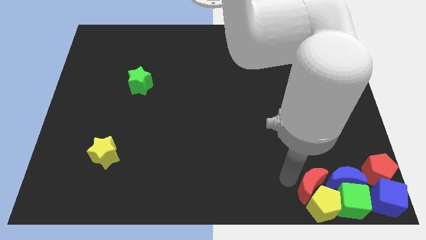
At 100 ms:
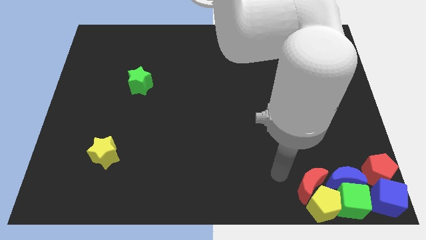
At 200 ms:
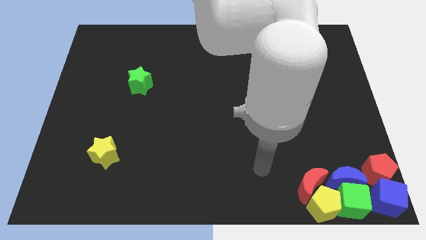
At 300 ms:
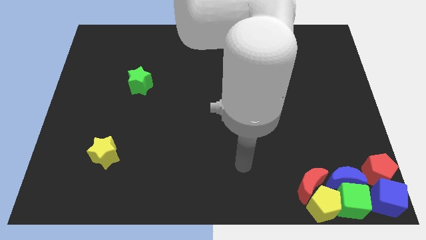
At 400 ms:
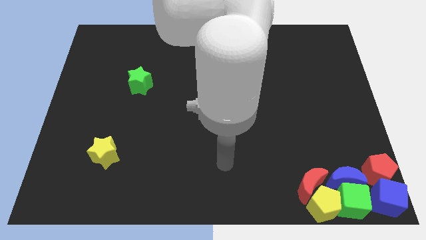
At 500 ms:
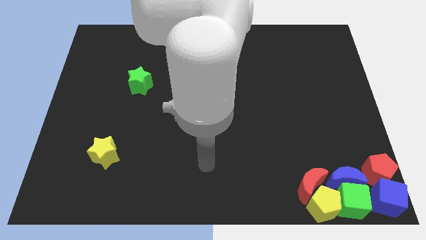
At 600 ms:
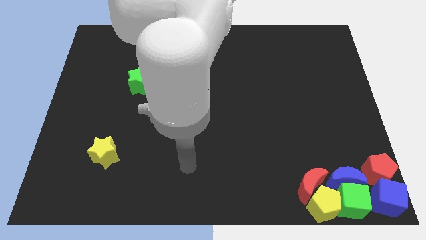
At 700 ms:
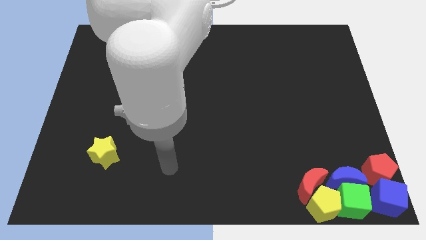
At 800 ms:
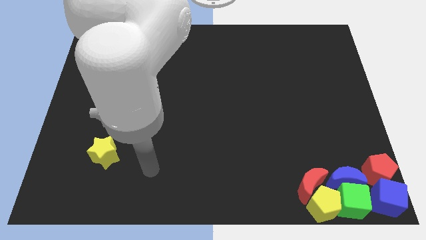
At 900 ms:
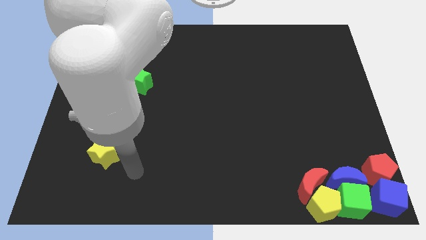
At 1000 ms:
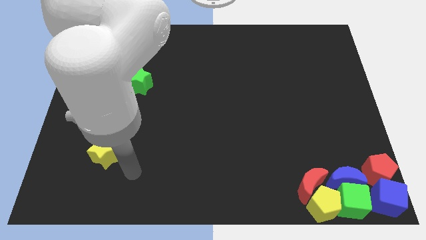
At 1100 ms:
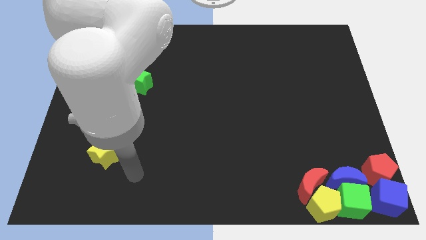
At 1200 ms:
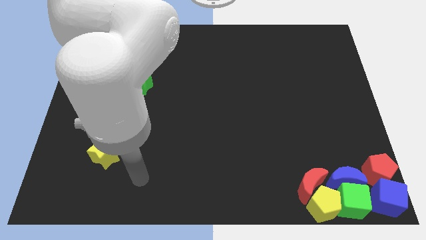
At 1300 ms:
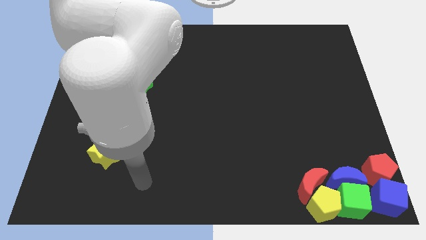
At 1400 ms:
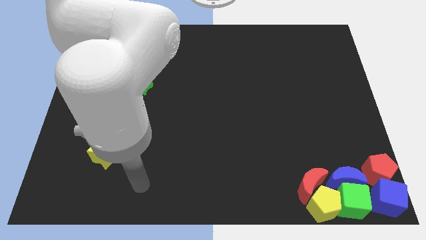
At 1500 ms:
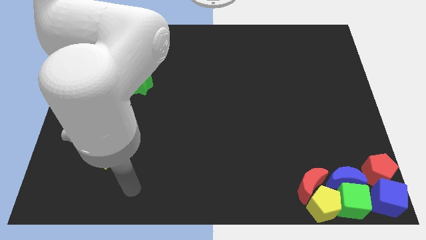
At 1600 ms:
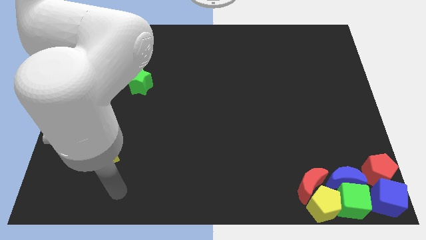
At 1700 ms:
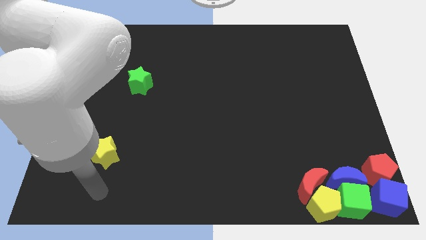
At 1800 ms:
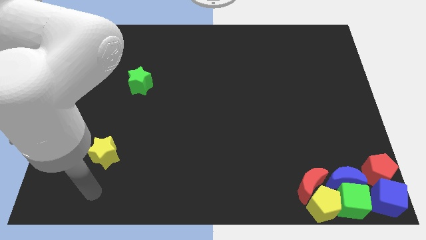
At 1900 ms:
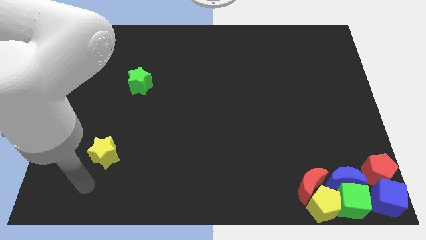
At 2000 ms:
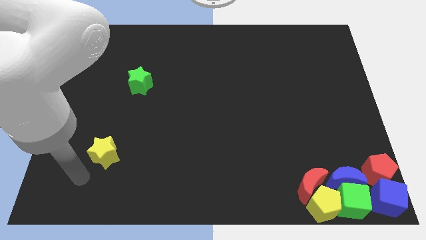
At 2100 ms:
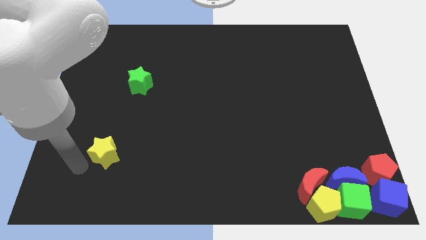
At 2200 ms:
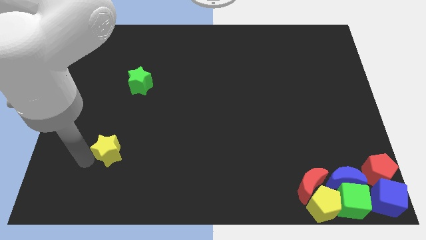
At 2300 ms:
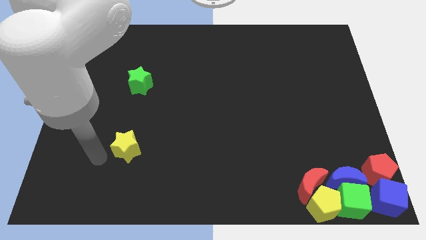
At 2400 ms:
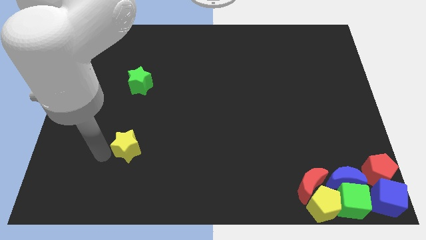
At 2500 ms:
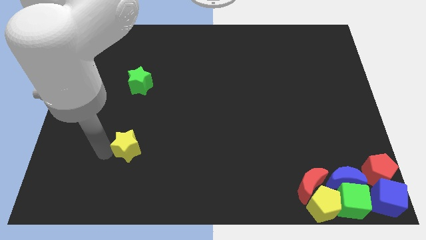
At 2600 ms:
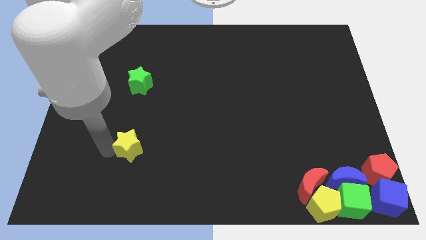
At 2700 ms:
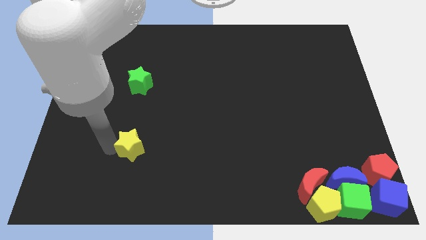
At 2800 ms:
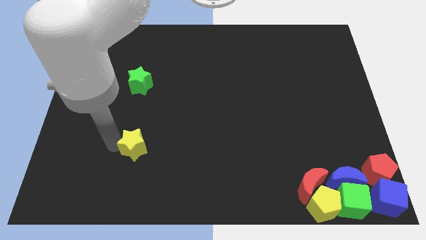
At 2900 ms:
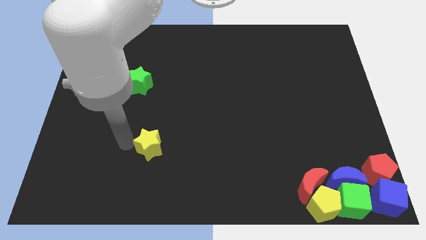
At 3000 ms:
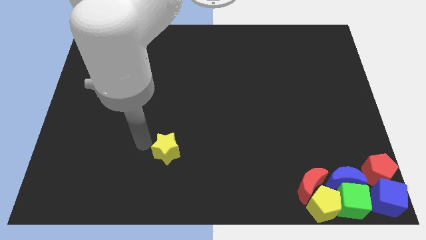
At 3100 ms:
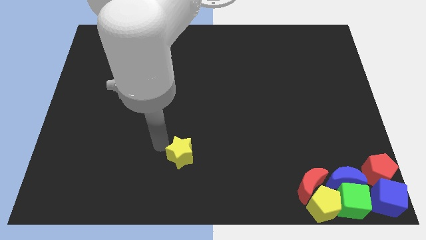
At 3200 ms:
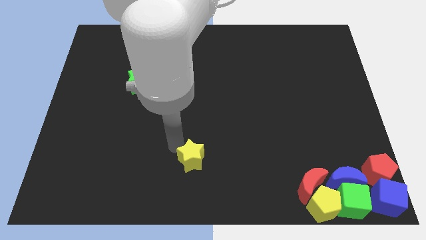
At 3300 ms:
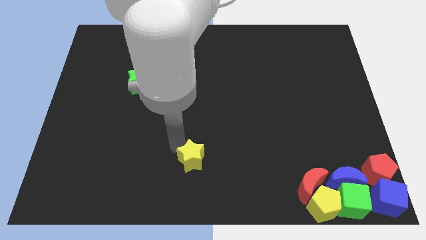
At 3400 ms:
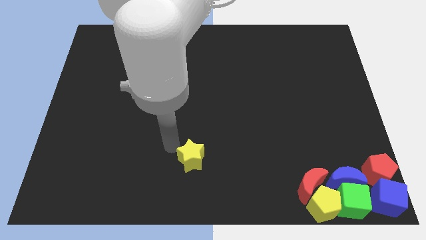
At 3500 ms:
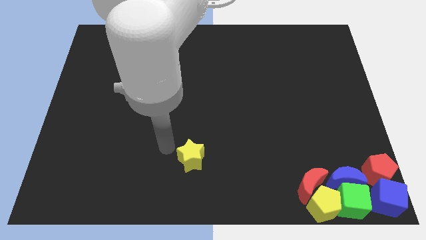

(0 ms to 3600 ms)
move the yellow star towards the right side of the board

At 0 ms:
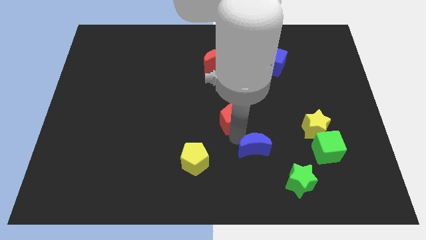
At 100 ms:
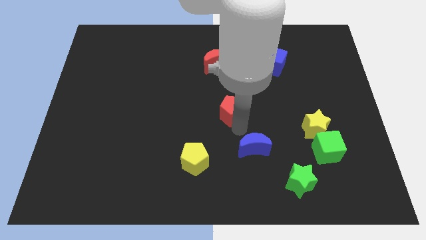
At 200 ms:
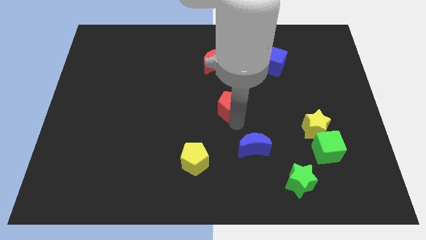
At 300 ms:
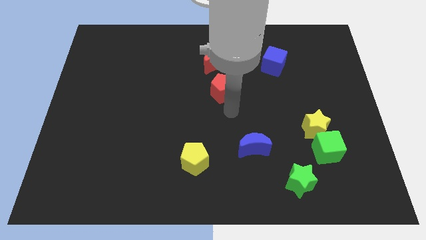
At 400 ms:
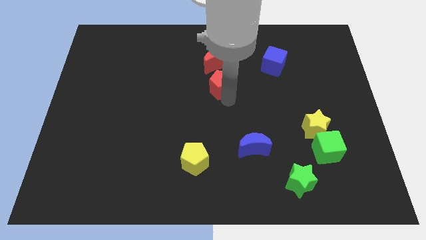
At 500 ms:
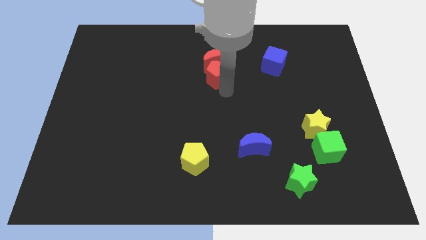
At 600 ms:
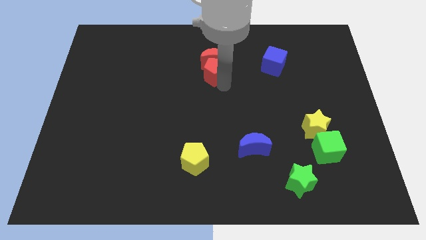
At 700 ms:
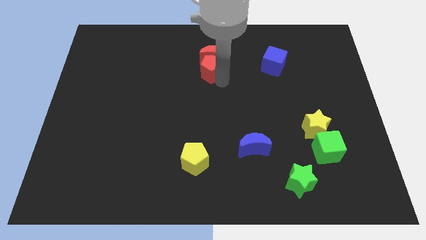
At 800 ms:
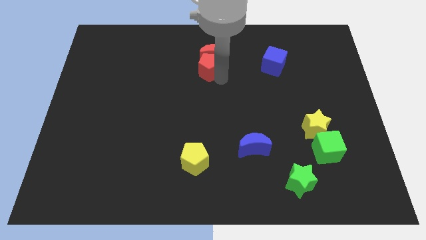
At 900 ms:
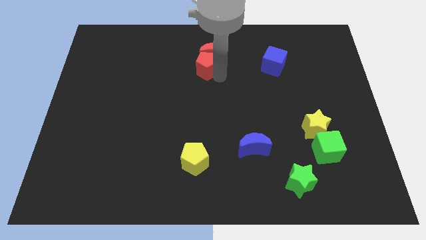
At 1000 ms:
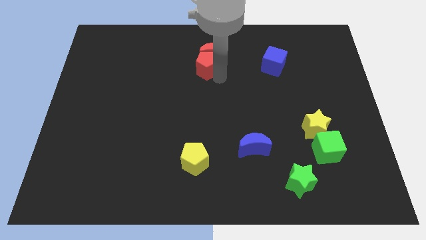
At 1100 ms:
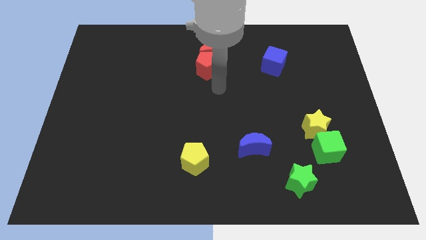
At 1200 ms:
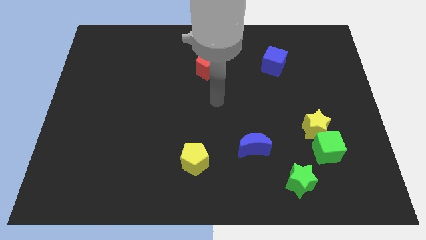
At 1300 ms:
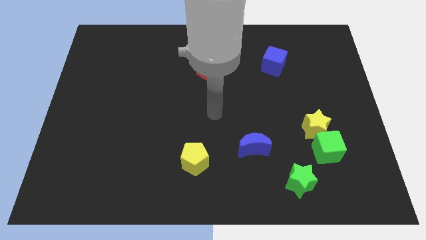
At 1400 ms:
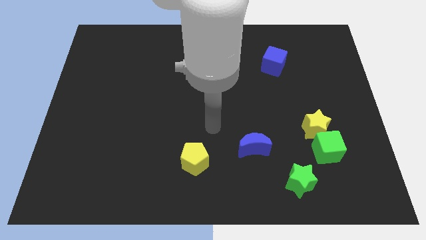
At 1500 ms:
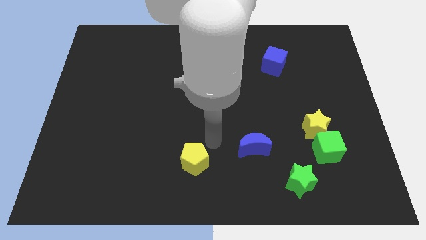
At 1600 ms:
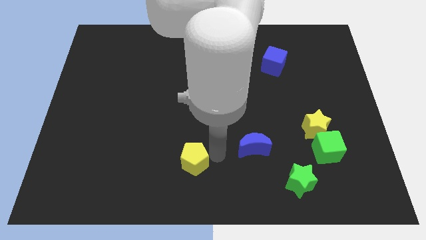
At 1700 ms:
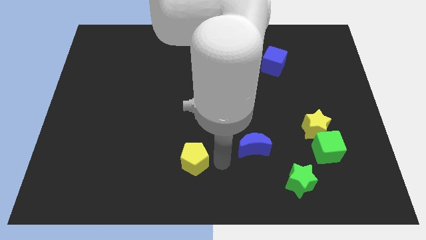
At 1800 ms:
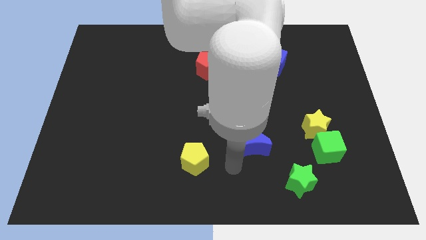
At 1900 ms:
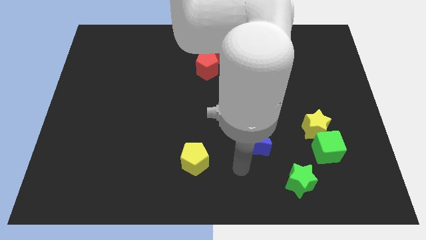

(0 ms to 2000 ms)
push the red blocks and blue moon towards the top side of the board

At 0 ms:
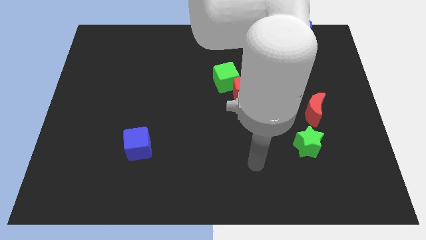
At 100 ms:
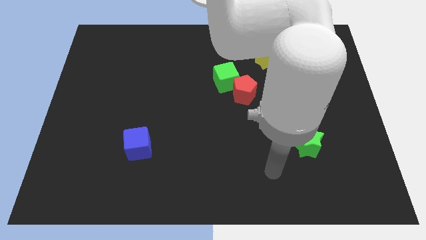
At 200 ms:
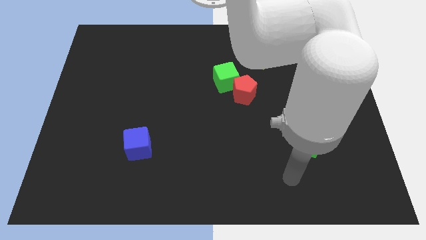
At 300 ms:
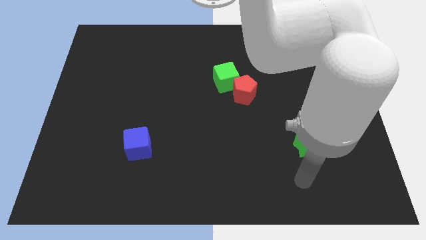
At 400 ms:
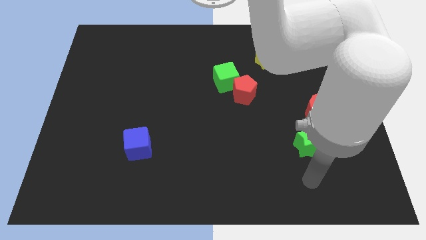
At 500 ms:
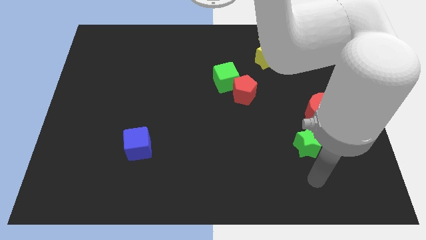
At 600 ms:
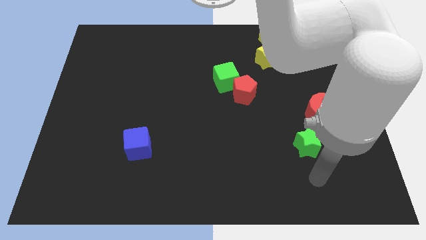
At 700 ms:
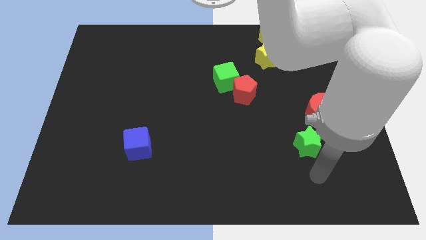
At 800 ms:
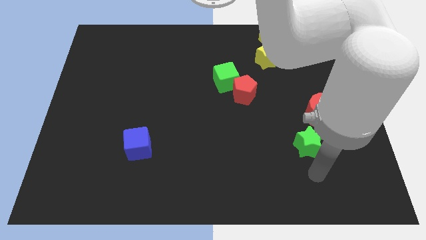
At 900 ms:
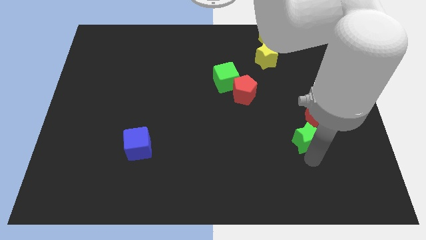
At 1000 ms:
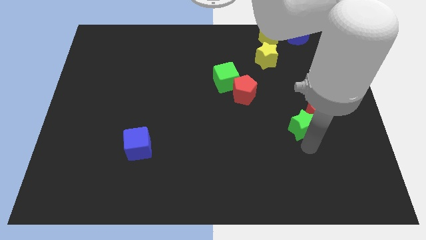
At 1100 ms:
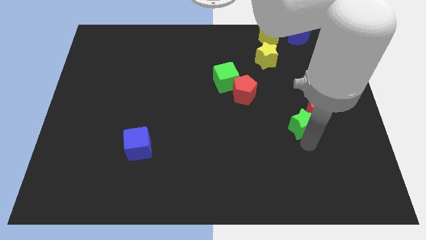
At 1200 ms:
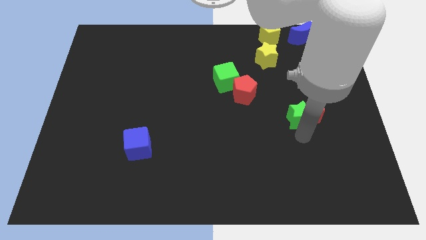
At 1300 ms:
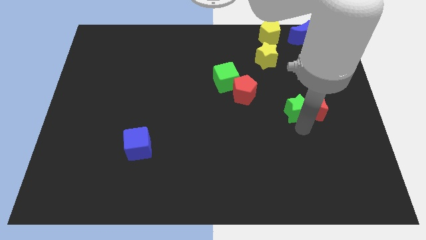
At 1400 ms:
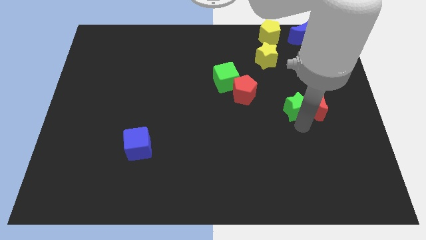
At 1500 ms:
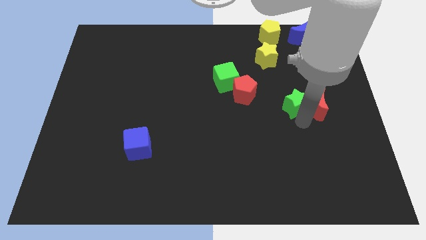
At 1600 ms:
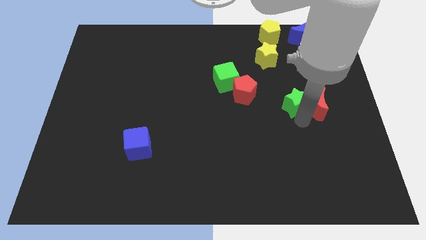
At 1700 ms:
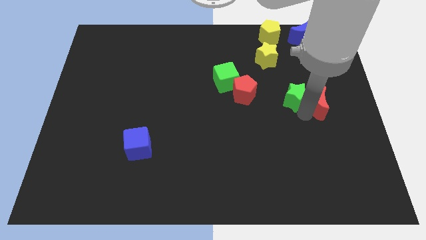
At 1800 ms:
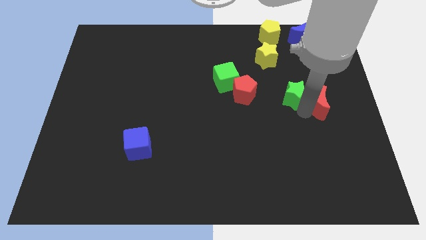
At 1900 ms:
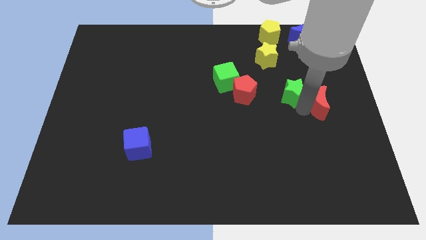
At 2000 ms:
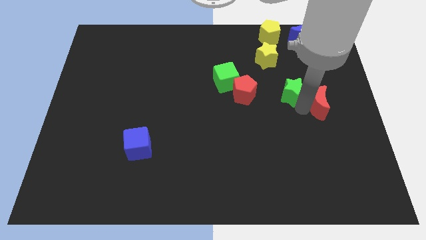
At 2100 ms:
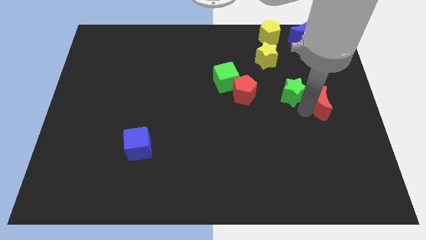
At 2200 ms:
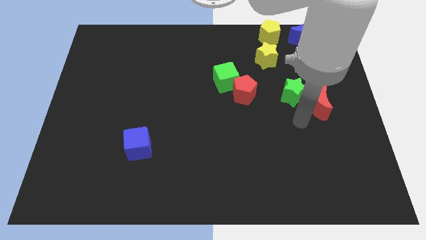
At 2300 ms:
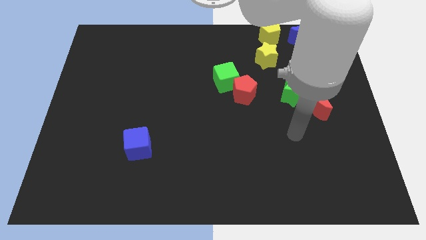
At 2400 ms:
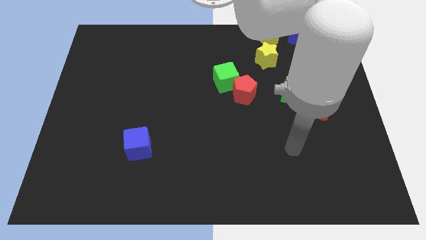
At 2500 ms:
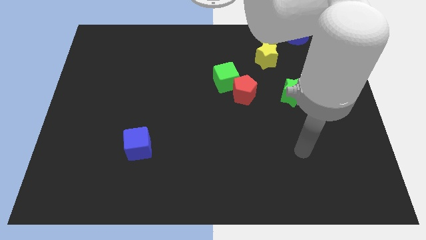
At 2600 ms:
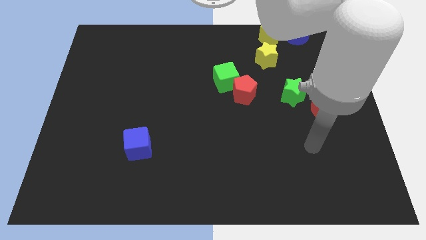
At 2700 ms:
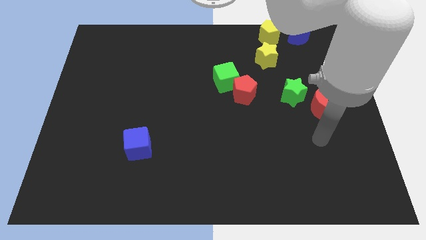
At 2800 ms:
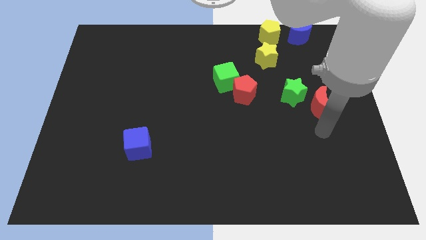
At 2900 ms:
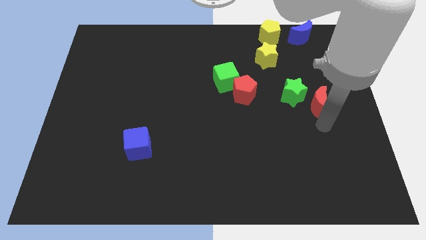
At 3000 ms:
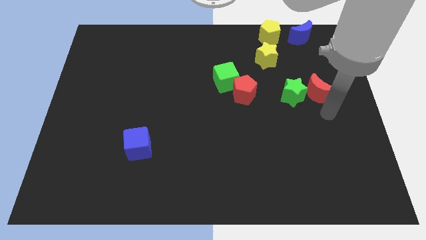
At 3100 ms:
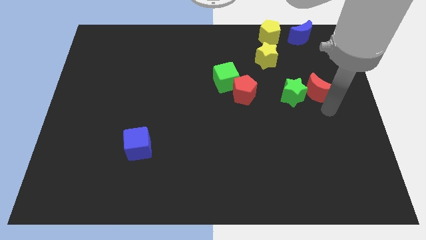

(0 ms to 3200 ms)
move the green star and red moon right to the red pentagon

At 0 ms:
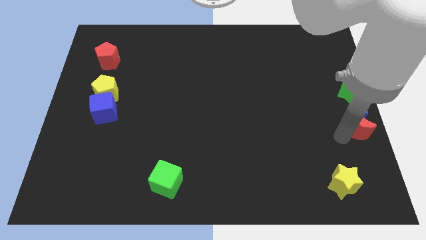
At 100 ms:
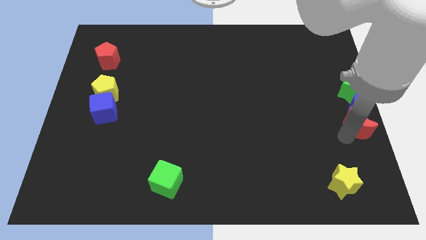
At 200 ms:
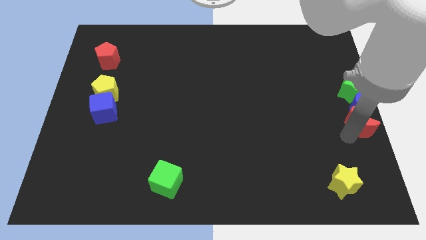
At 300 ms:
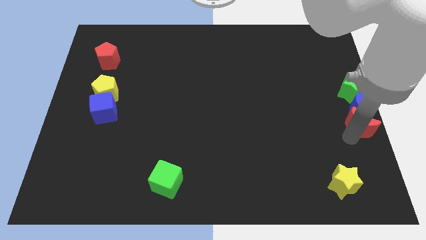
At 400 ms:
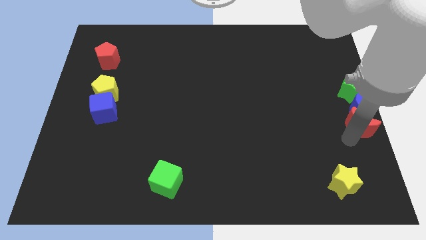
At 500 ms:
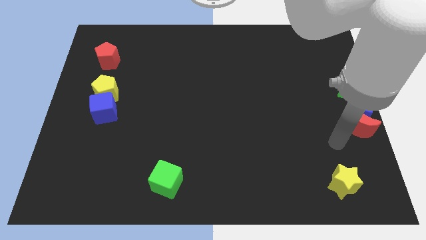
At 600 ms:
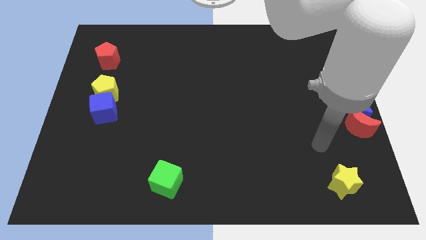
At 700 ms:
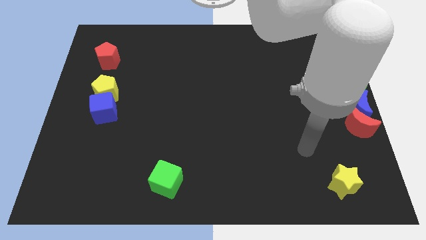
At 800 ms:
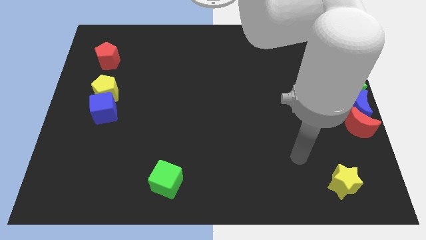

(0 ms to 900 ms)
push the red moon below the blue moon
